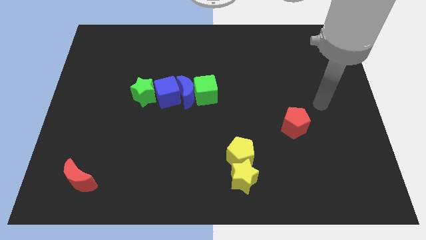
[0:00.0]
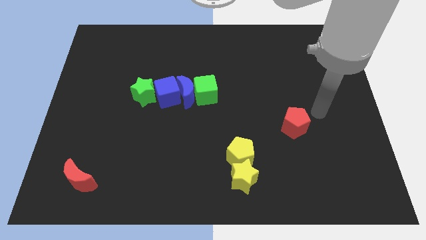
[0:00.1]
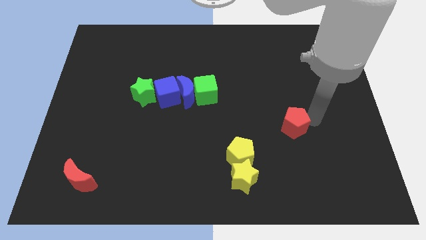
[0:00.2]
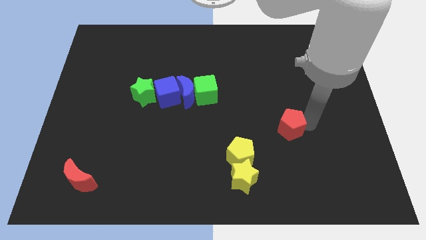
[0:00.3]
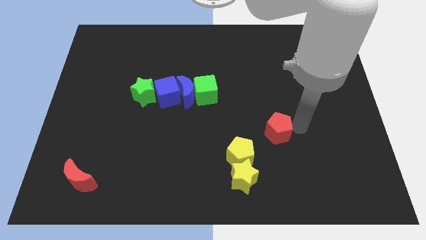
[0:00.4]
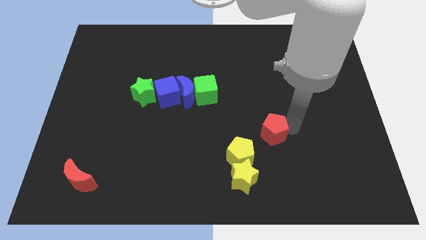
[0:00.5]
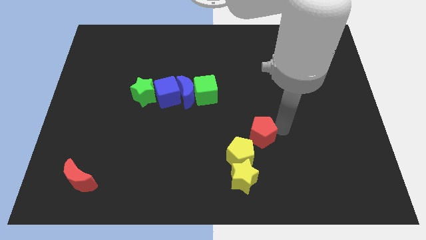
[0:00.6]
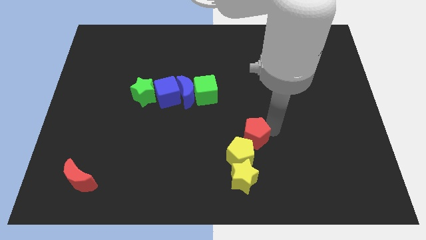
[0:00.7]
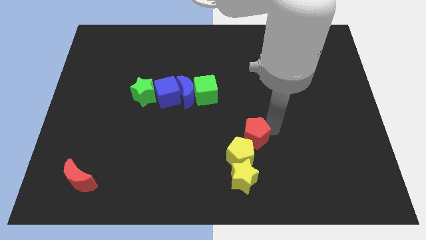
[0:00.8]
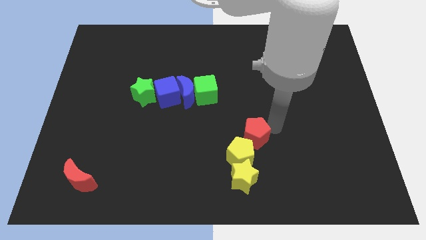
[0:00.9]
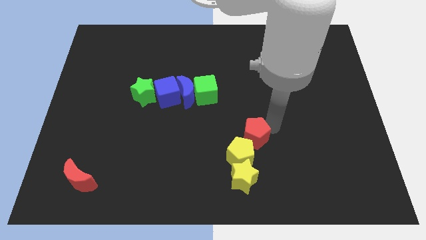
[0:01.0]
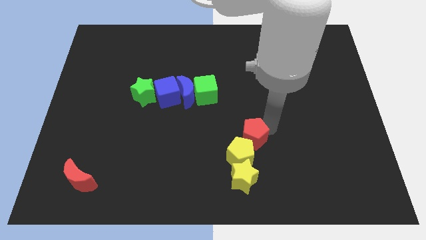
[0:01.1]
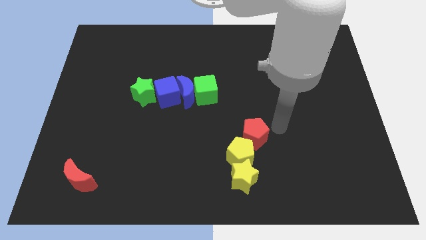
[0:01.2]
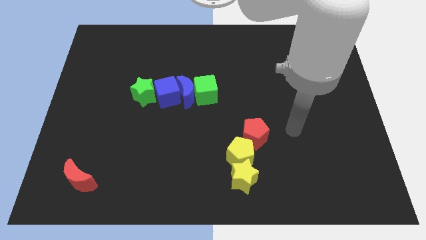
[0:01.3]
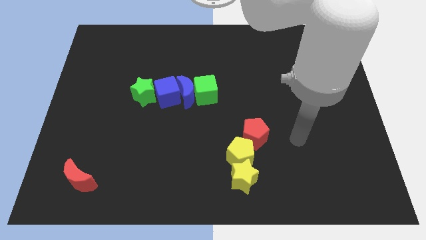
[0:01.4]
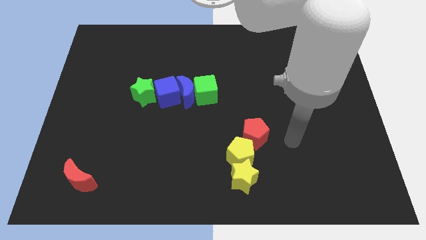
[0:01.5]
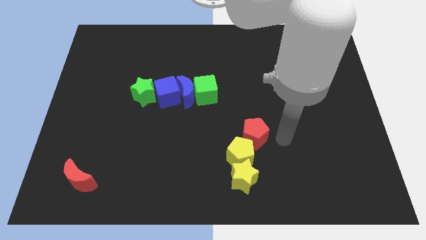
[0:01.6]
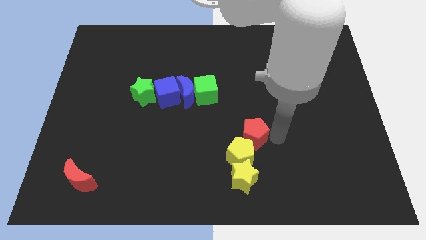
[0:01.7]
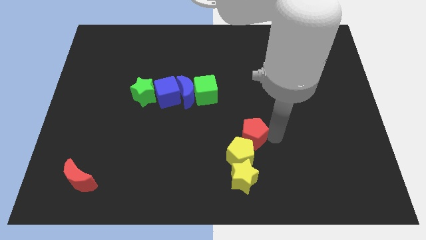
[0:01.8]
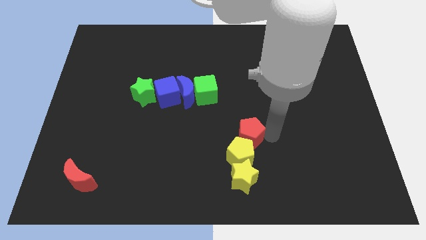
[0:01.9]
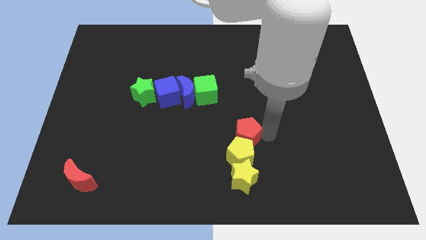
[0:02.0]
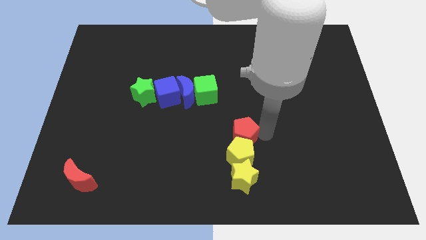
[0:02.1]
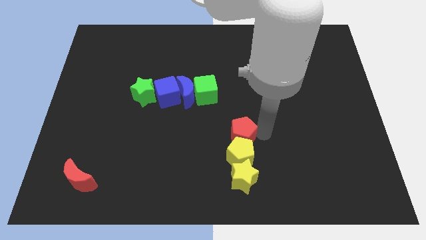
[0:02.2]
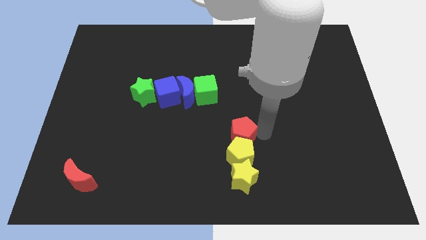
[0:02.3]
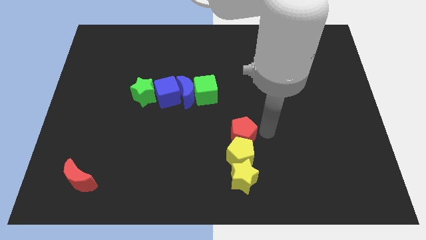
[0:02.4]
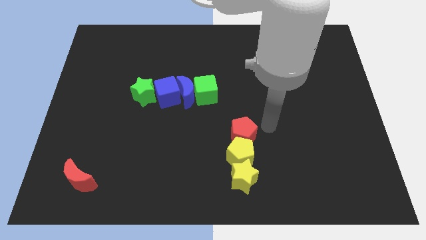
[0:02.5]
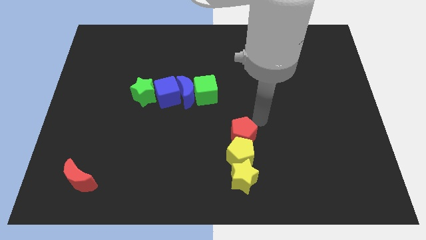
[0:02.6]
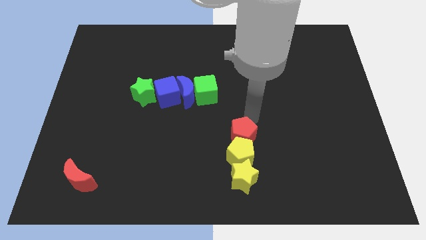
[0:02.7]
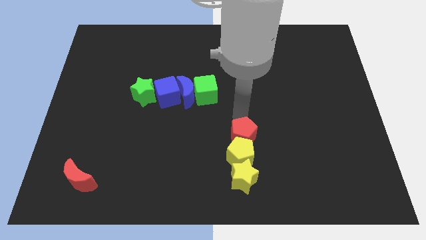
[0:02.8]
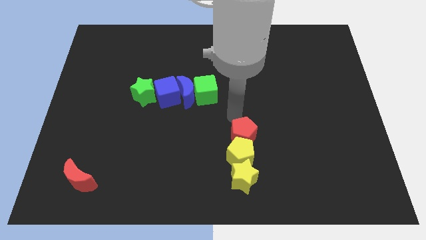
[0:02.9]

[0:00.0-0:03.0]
place the red pentagon above the yellow pentagon

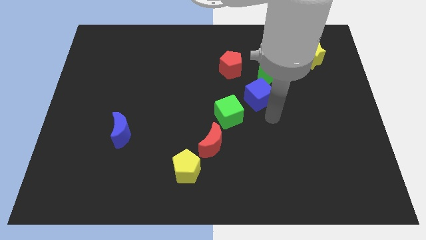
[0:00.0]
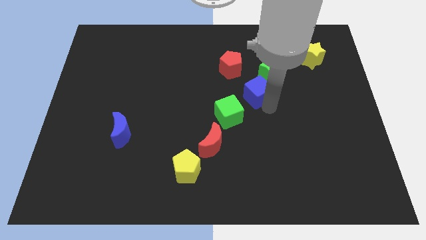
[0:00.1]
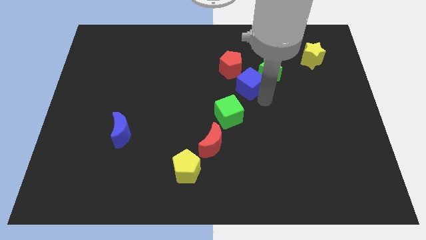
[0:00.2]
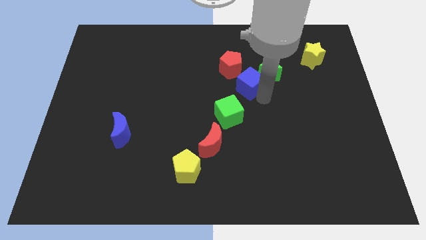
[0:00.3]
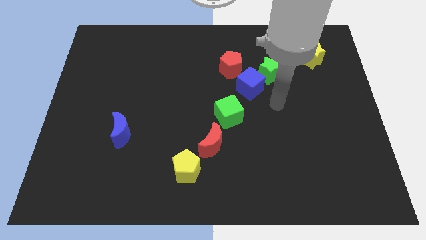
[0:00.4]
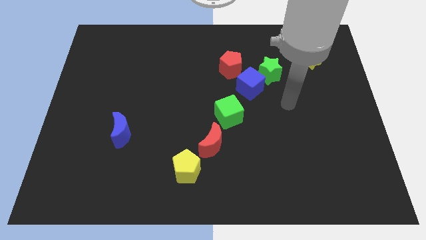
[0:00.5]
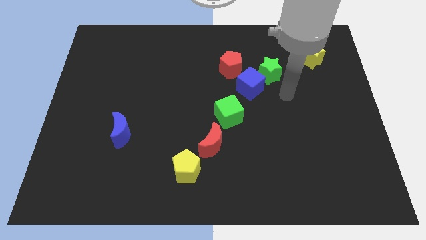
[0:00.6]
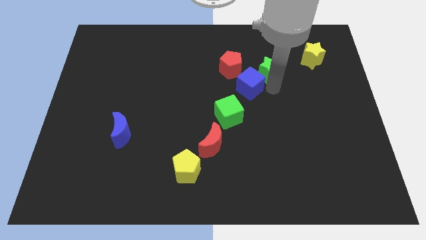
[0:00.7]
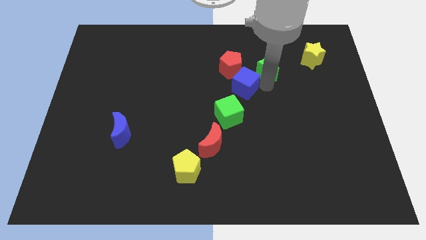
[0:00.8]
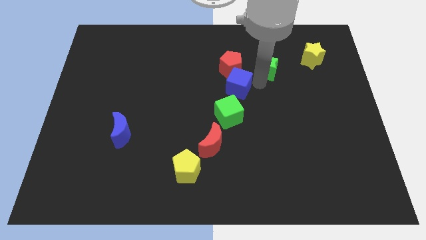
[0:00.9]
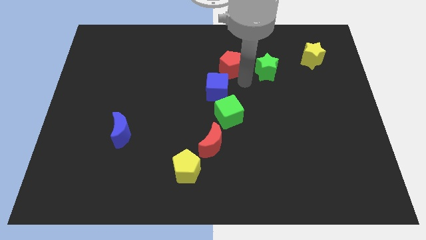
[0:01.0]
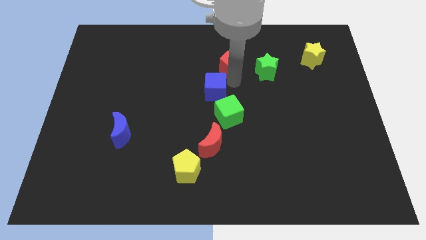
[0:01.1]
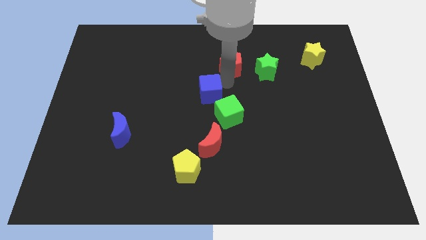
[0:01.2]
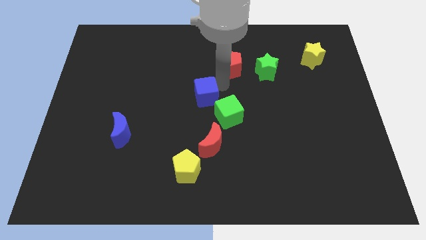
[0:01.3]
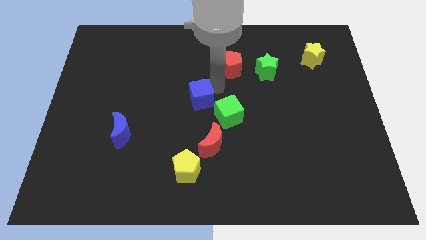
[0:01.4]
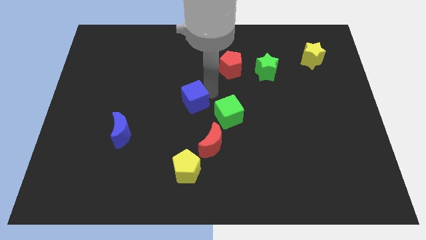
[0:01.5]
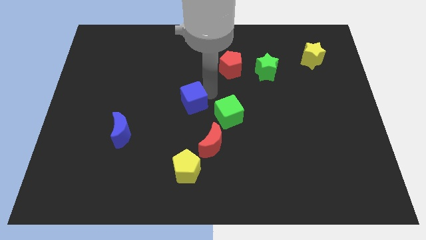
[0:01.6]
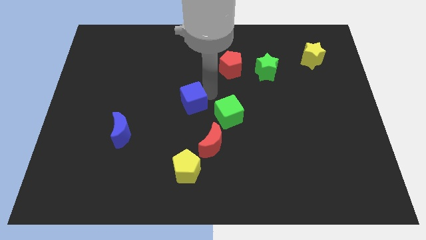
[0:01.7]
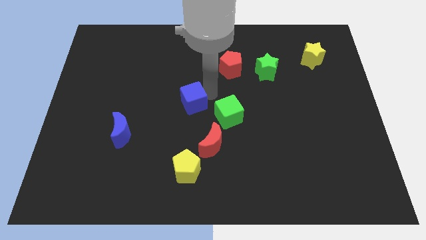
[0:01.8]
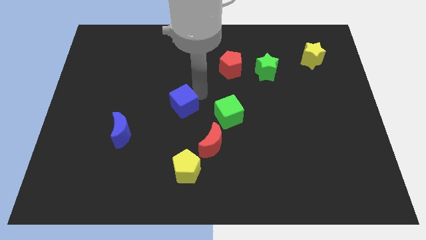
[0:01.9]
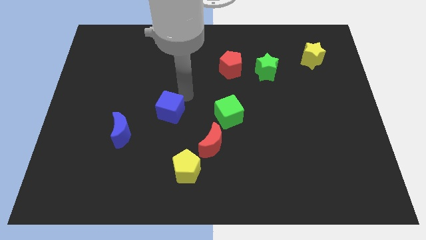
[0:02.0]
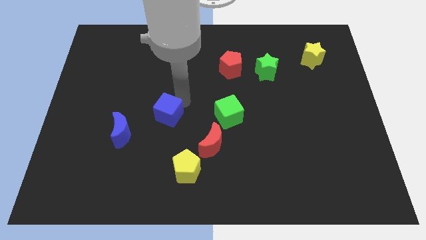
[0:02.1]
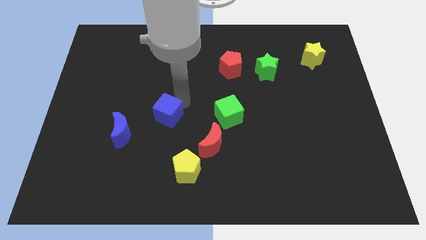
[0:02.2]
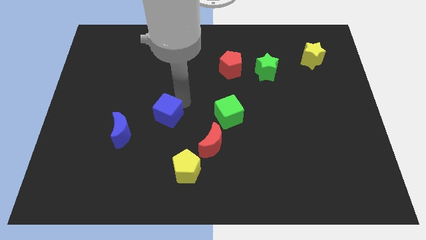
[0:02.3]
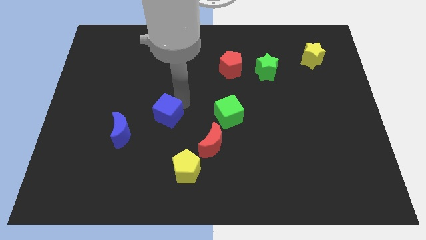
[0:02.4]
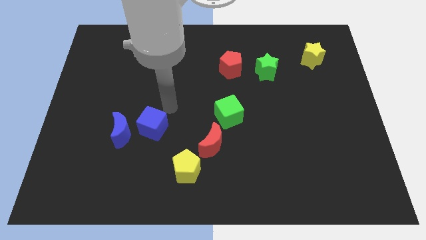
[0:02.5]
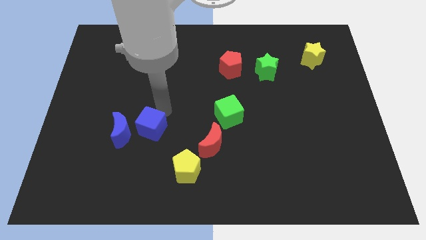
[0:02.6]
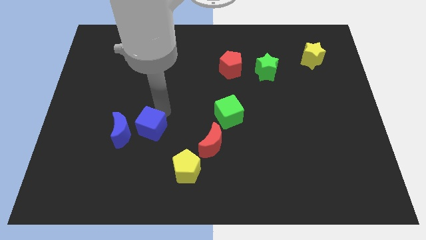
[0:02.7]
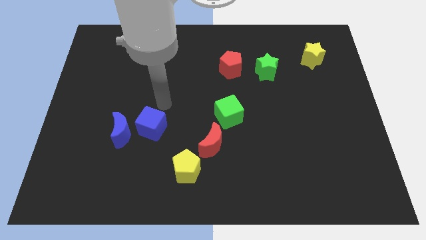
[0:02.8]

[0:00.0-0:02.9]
move the blue cube diagonally to the yellow pentagon

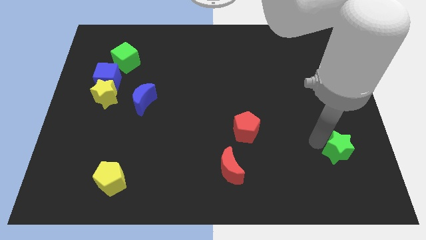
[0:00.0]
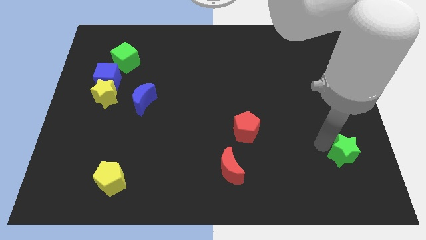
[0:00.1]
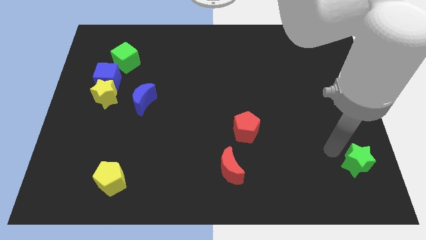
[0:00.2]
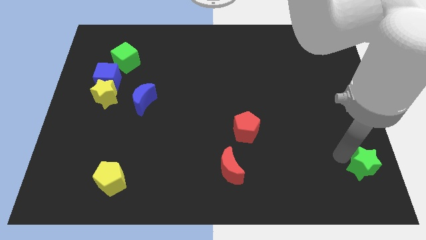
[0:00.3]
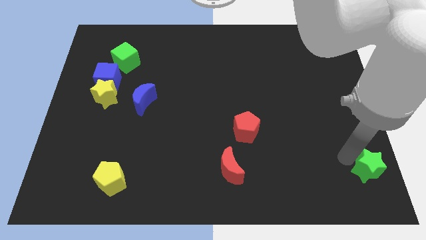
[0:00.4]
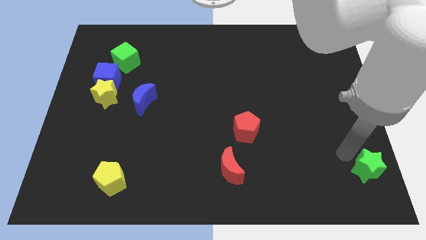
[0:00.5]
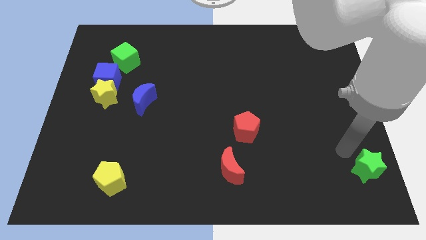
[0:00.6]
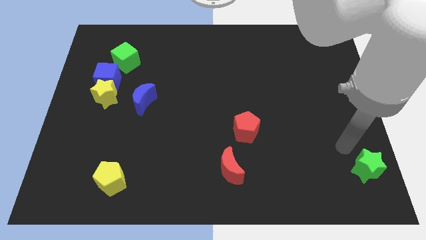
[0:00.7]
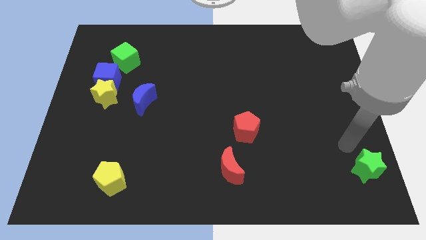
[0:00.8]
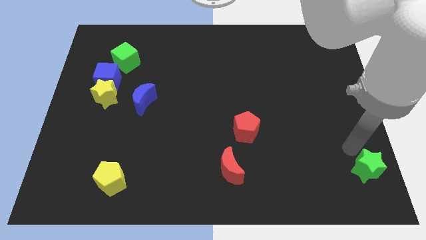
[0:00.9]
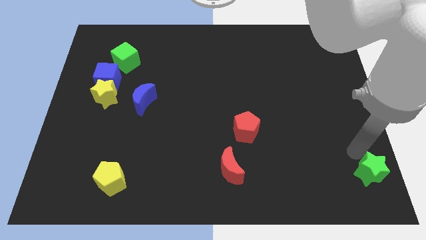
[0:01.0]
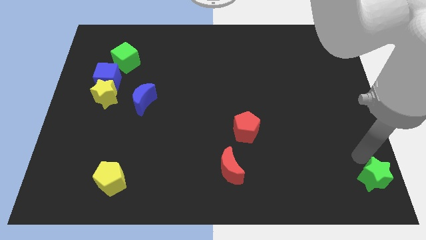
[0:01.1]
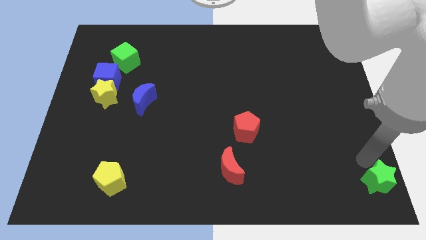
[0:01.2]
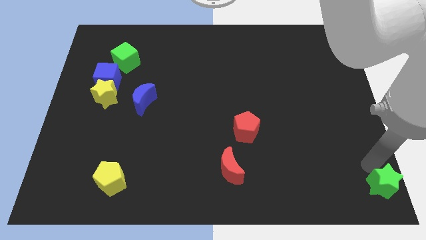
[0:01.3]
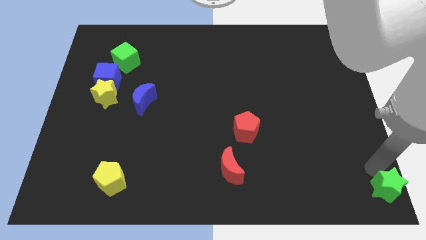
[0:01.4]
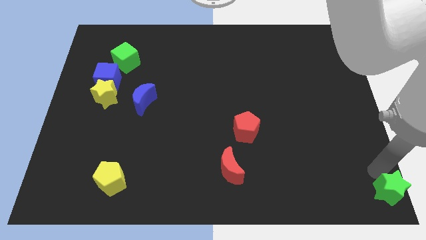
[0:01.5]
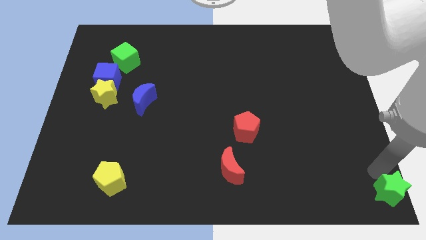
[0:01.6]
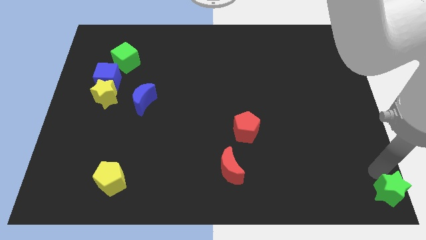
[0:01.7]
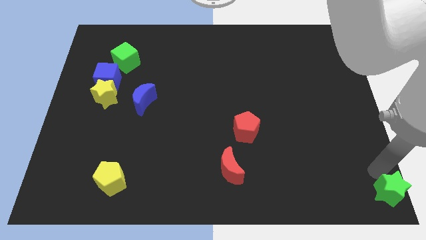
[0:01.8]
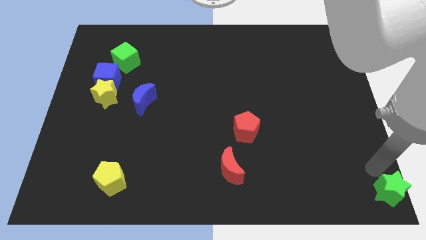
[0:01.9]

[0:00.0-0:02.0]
place the green star at the bottom right corner of the board

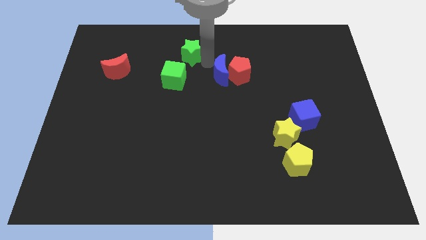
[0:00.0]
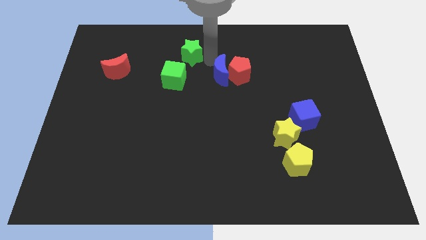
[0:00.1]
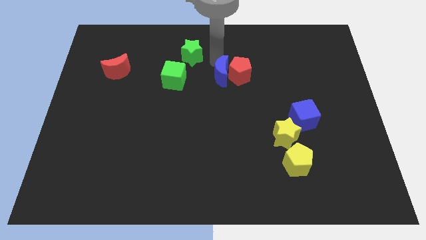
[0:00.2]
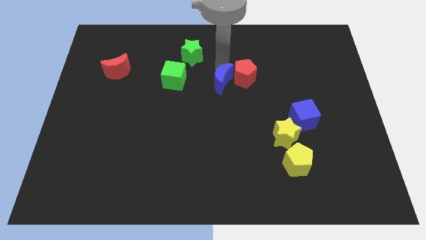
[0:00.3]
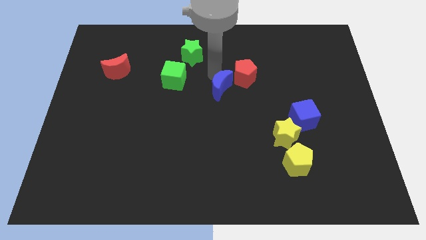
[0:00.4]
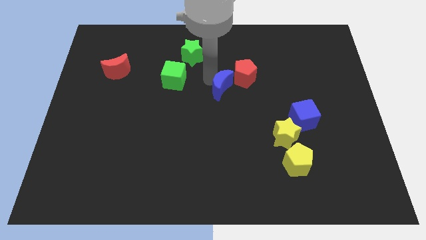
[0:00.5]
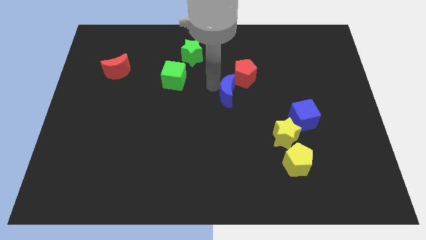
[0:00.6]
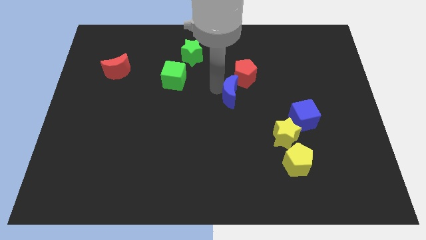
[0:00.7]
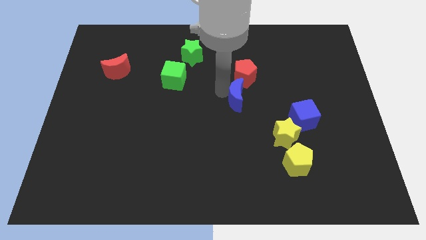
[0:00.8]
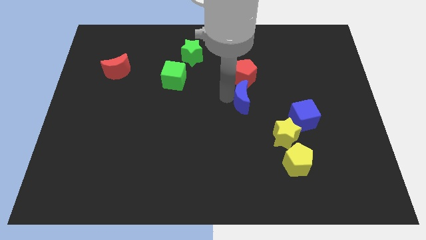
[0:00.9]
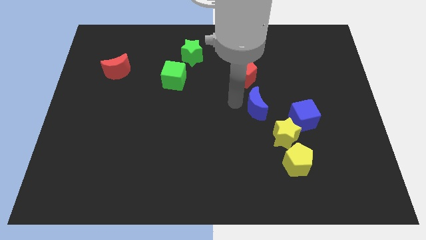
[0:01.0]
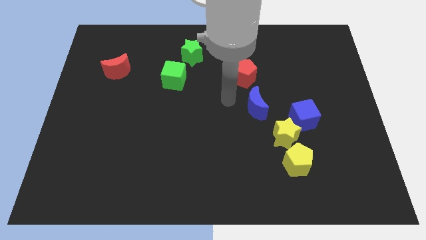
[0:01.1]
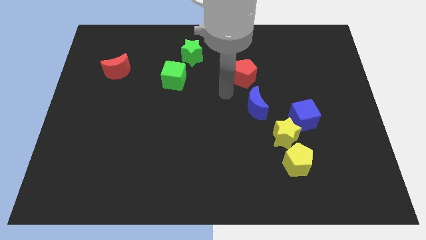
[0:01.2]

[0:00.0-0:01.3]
push the blue moon below the red pentagon
